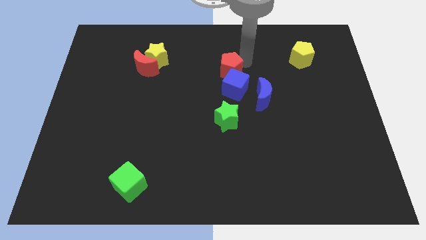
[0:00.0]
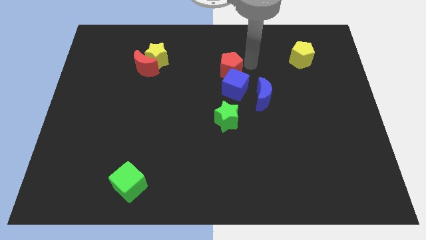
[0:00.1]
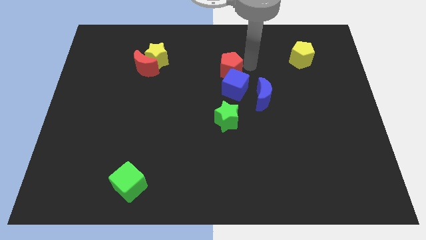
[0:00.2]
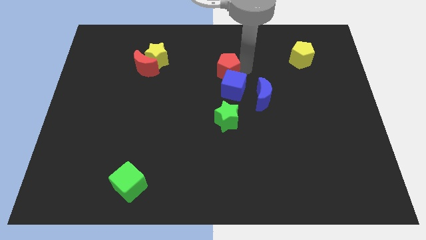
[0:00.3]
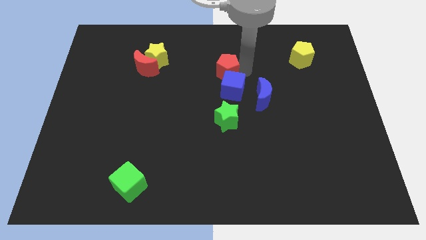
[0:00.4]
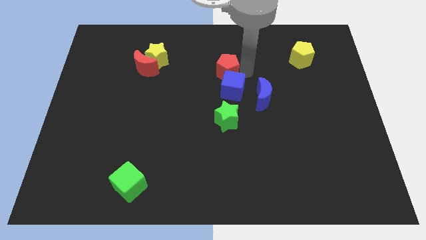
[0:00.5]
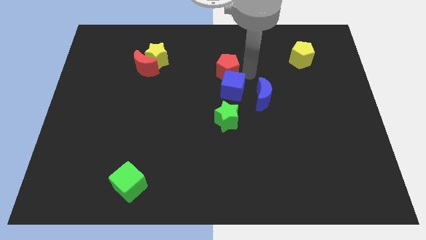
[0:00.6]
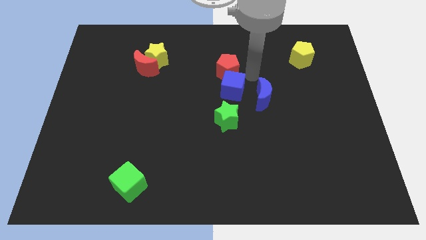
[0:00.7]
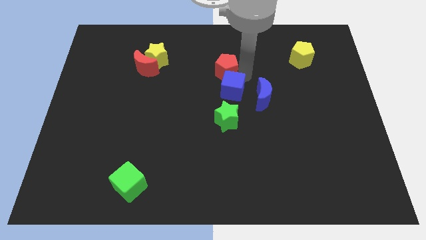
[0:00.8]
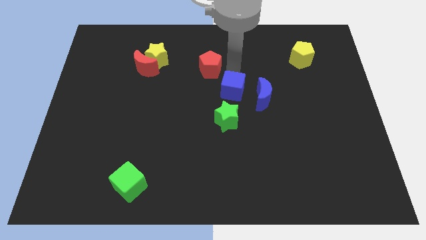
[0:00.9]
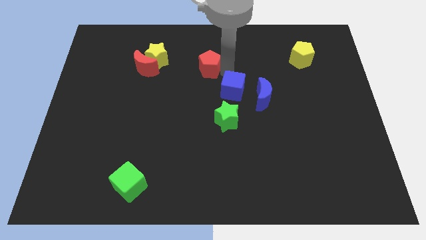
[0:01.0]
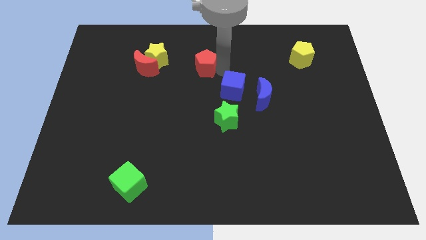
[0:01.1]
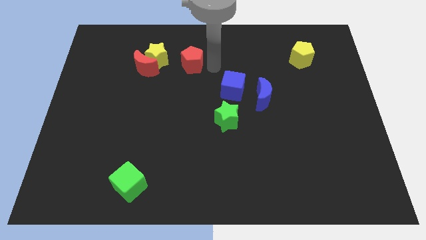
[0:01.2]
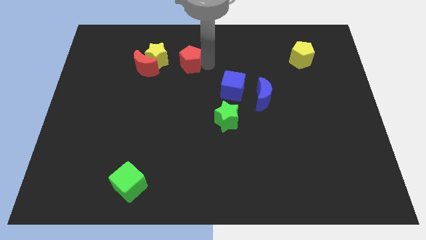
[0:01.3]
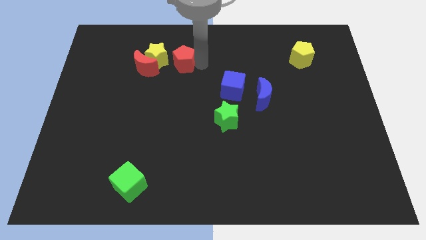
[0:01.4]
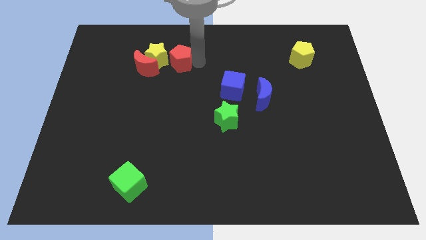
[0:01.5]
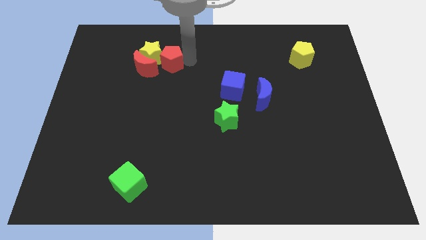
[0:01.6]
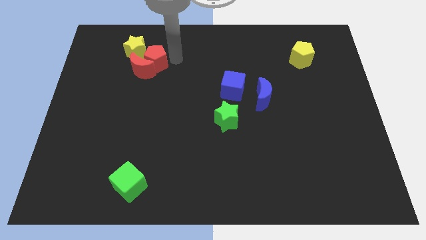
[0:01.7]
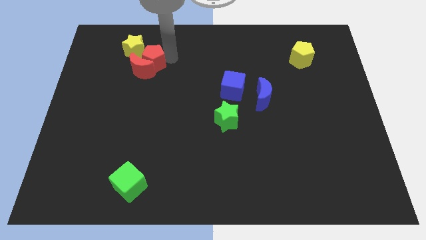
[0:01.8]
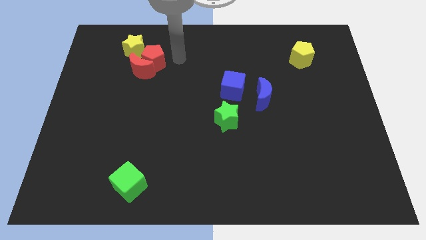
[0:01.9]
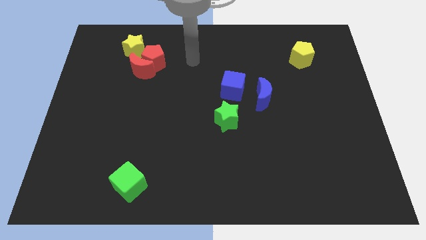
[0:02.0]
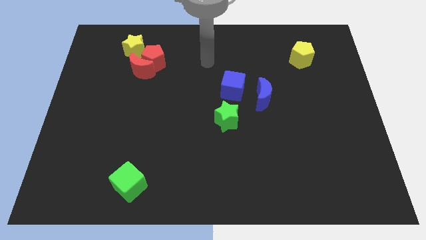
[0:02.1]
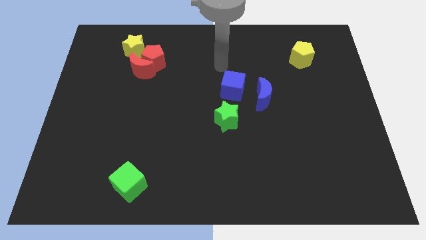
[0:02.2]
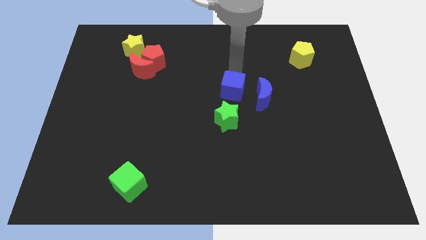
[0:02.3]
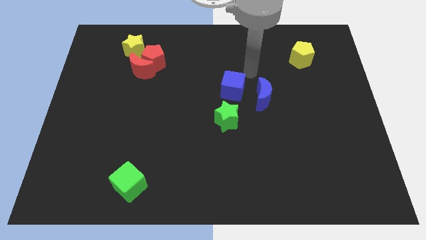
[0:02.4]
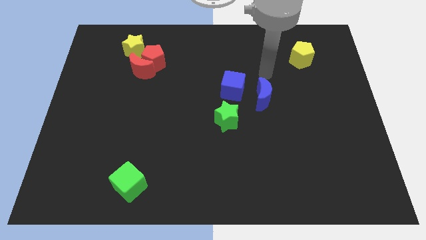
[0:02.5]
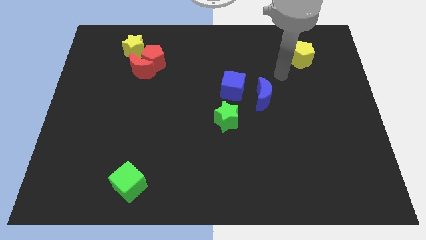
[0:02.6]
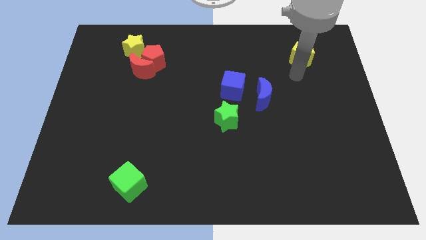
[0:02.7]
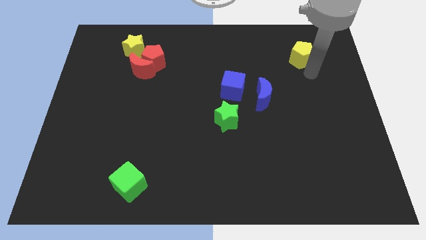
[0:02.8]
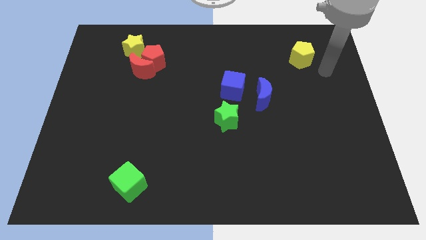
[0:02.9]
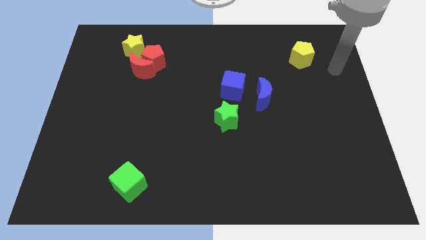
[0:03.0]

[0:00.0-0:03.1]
slide the red pentagon into the top side of the red crescent

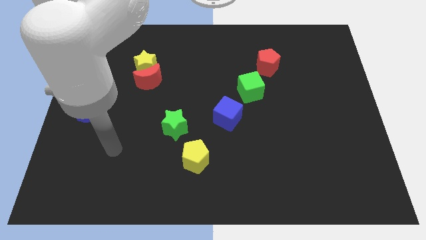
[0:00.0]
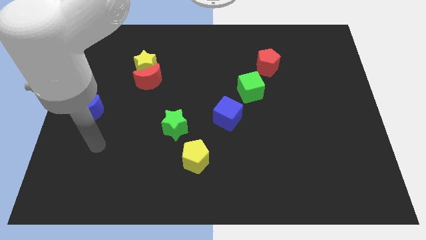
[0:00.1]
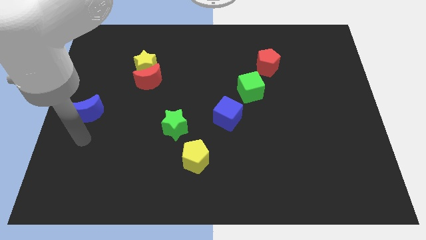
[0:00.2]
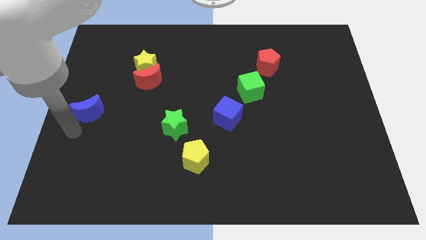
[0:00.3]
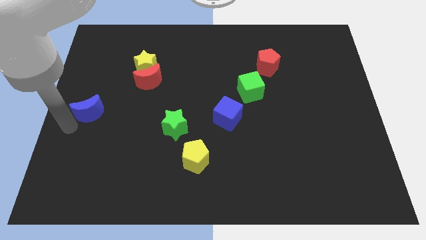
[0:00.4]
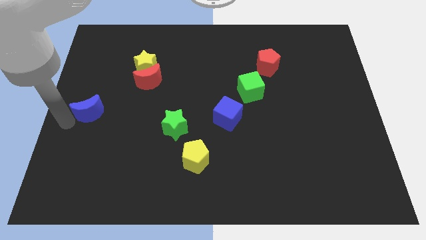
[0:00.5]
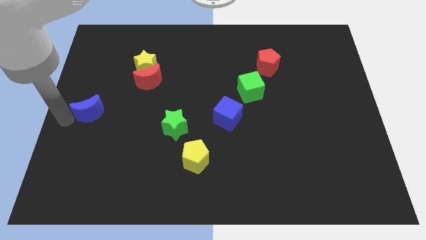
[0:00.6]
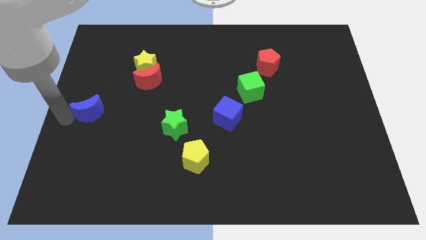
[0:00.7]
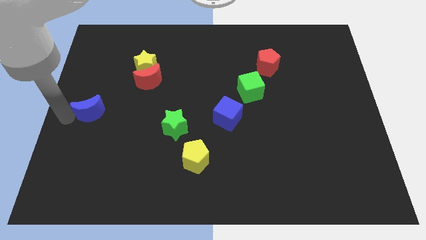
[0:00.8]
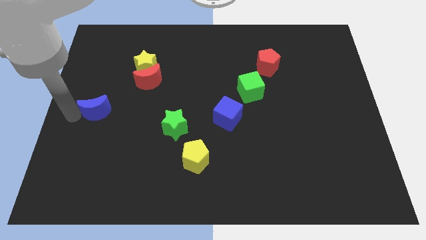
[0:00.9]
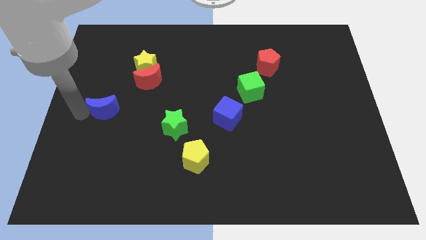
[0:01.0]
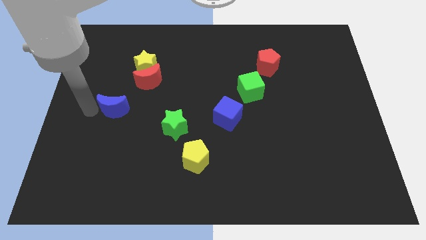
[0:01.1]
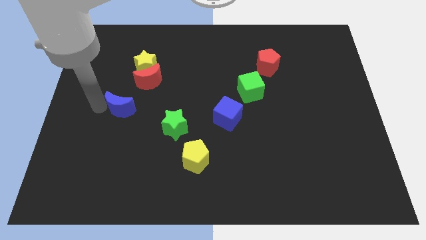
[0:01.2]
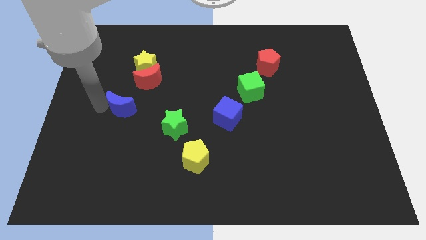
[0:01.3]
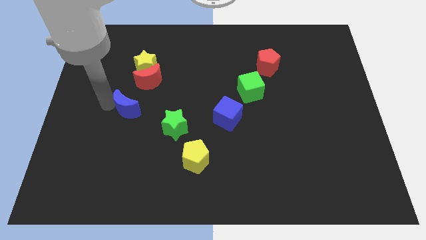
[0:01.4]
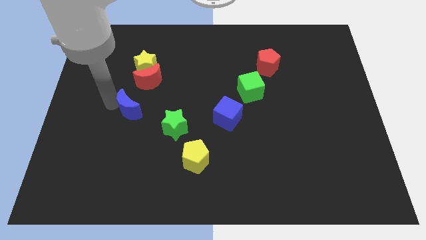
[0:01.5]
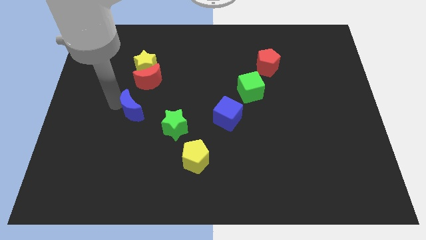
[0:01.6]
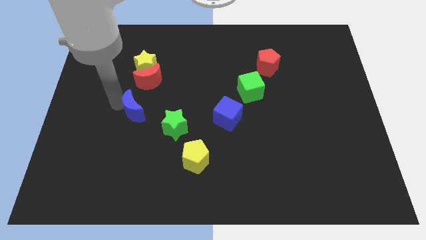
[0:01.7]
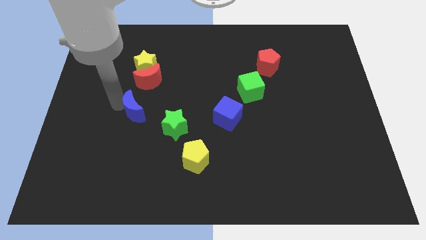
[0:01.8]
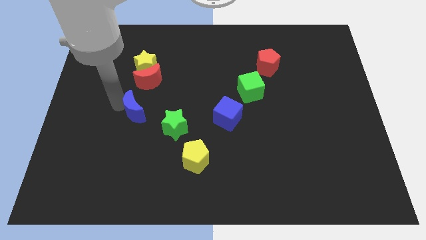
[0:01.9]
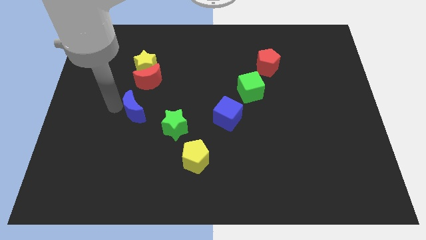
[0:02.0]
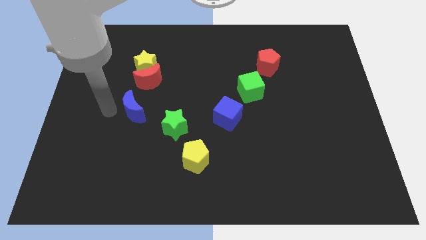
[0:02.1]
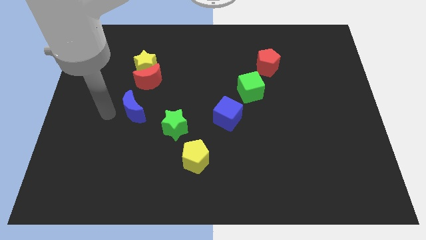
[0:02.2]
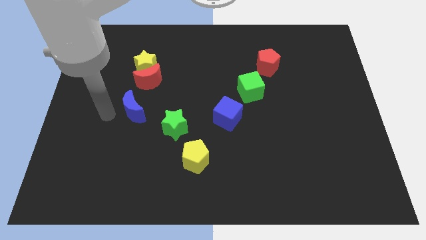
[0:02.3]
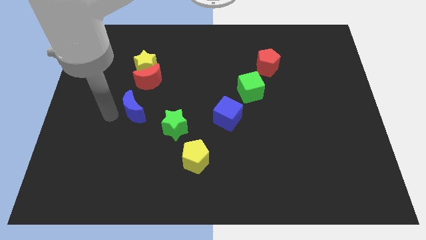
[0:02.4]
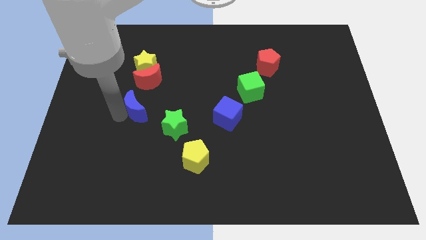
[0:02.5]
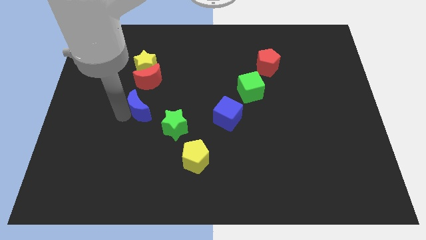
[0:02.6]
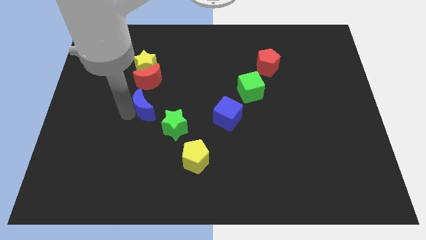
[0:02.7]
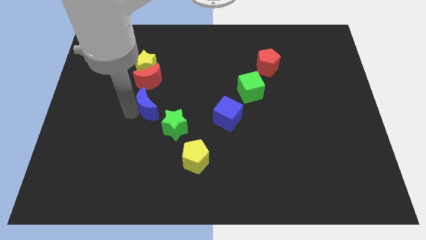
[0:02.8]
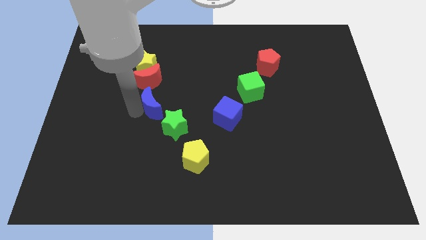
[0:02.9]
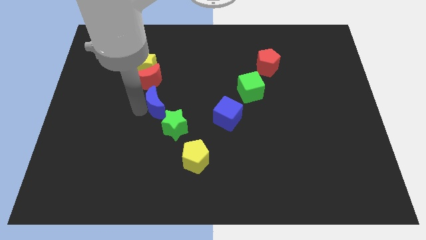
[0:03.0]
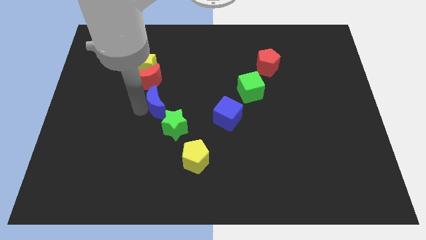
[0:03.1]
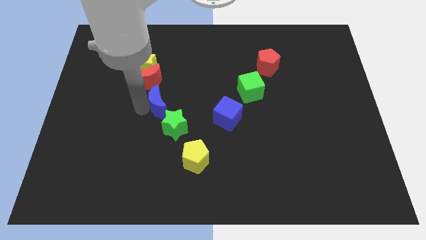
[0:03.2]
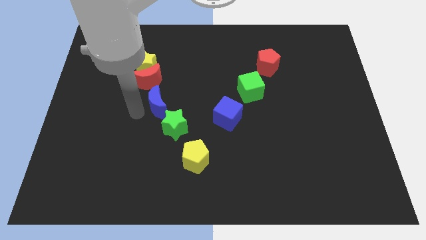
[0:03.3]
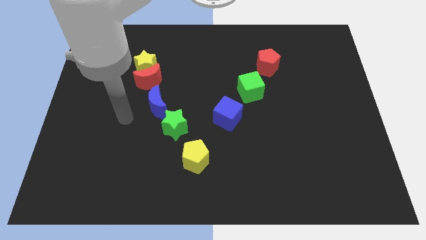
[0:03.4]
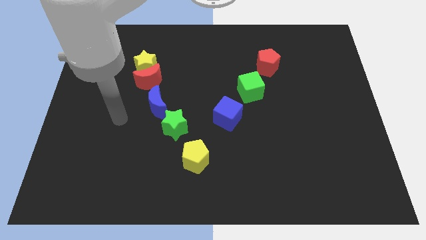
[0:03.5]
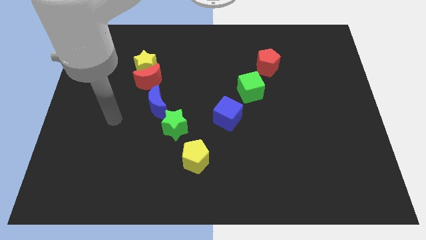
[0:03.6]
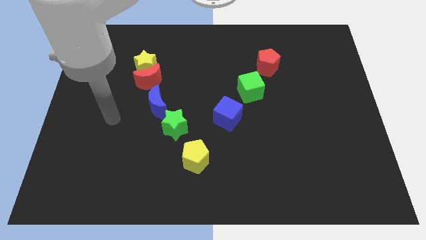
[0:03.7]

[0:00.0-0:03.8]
place the blue crescent in between the green star and the red crescent to form a diagnoal line

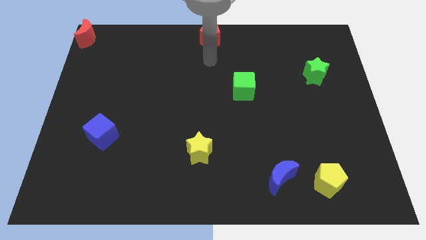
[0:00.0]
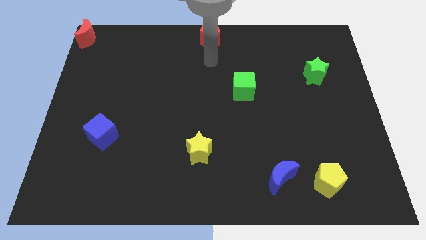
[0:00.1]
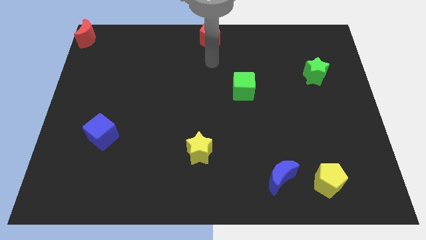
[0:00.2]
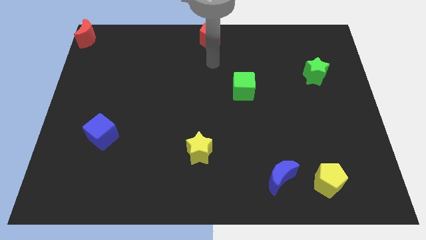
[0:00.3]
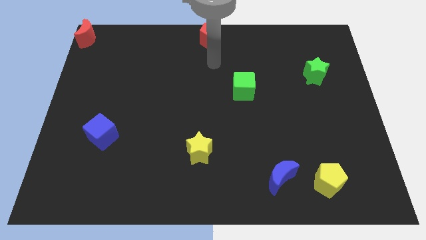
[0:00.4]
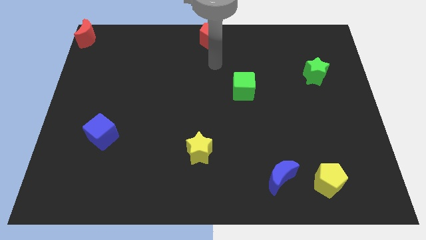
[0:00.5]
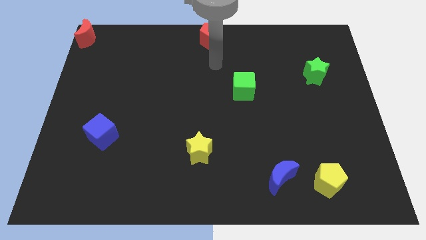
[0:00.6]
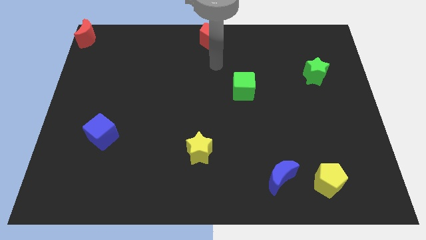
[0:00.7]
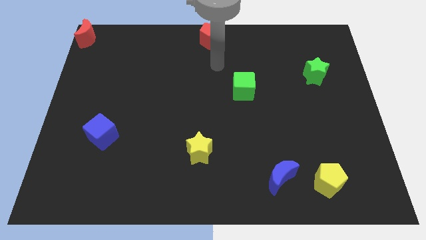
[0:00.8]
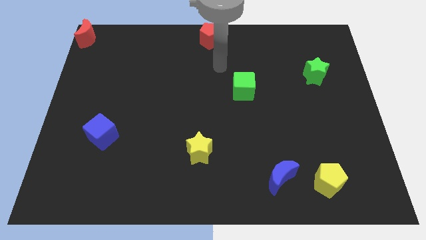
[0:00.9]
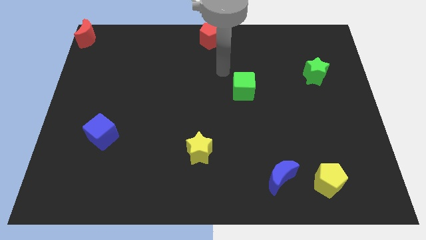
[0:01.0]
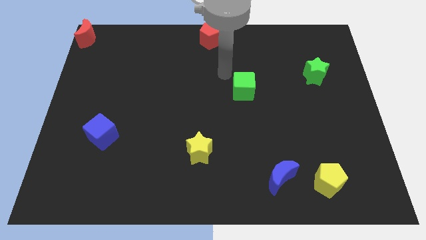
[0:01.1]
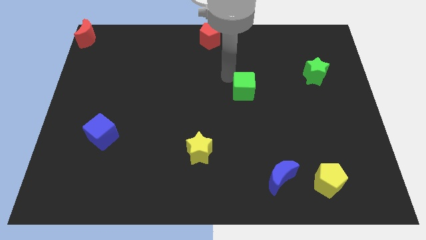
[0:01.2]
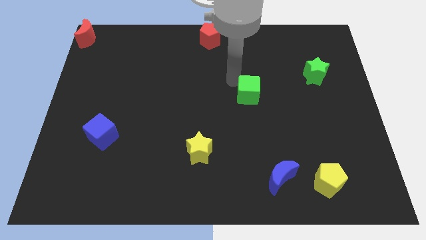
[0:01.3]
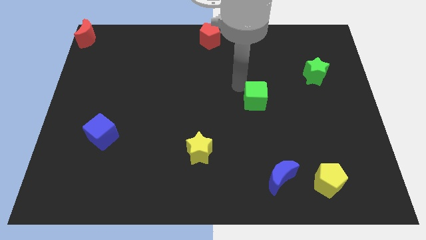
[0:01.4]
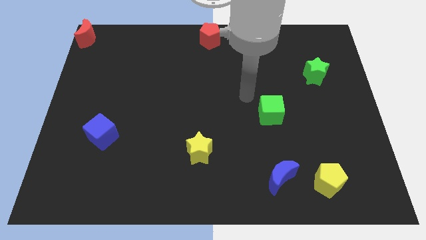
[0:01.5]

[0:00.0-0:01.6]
place the green cube in between green star and yellow star

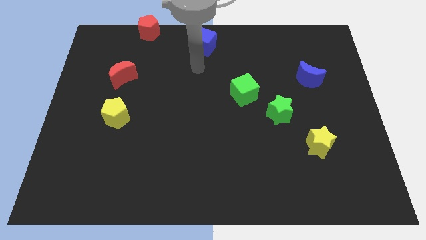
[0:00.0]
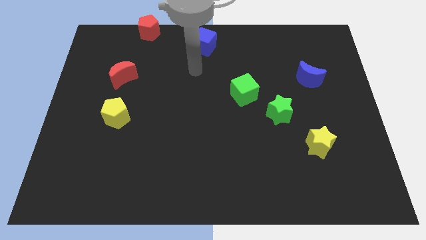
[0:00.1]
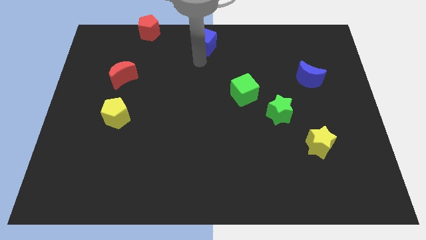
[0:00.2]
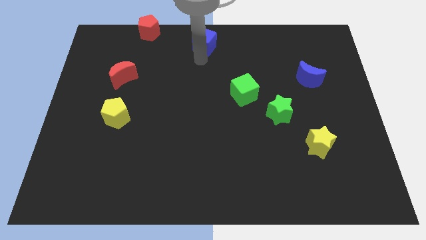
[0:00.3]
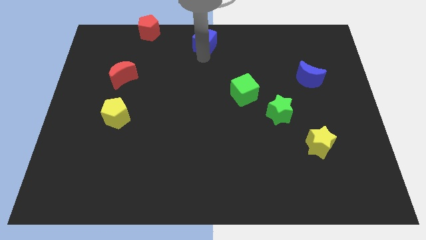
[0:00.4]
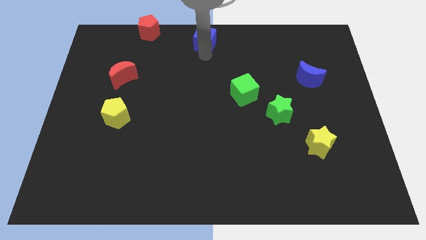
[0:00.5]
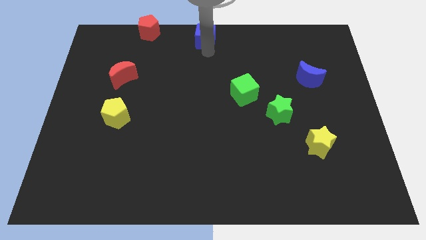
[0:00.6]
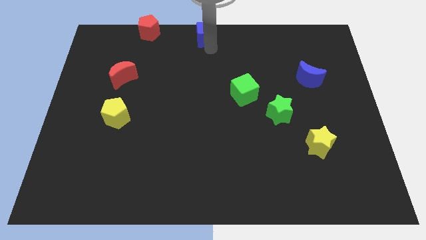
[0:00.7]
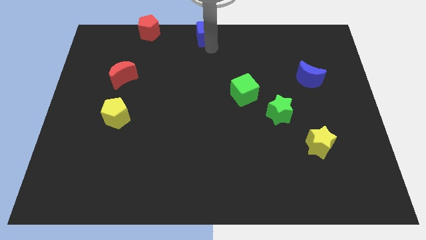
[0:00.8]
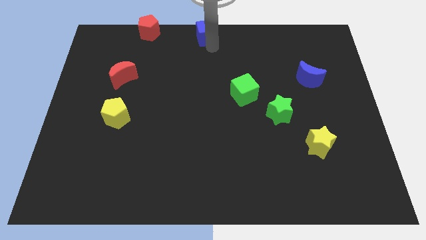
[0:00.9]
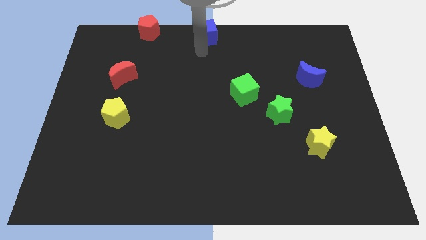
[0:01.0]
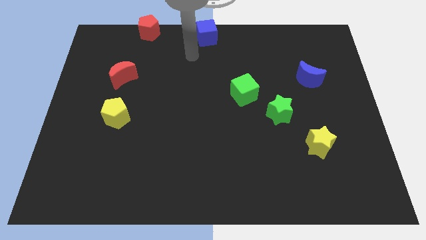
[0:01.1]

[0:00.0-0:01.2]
move blue cube to the top center of the board
